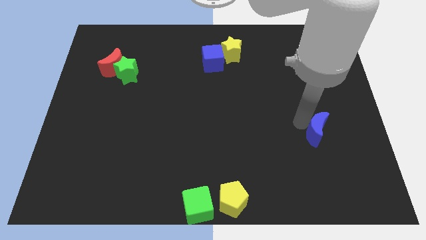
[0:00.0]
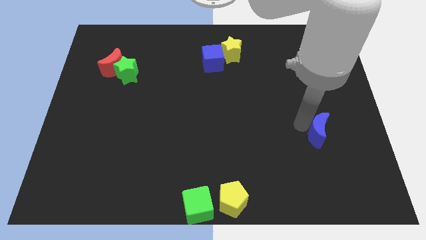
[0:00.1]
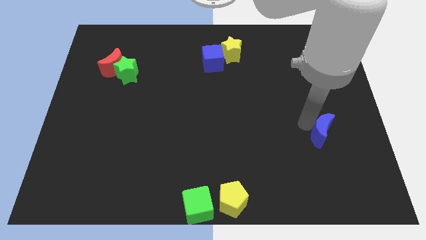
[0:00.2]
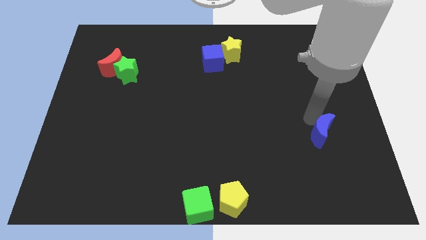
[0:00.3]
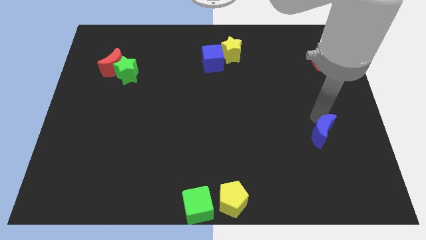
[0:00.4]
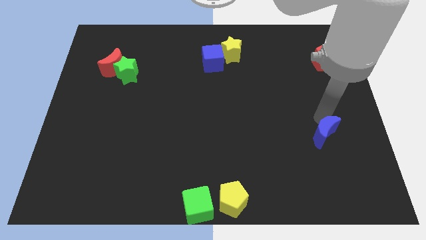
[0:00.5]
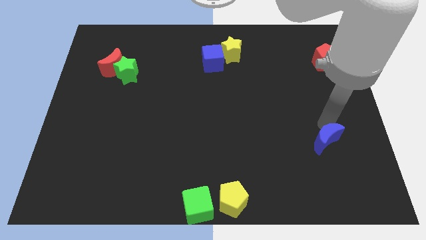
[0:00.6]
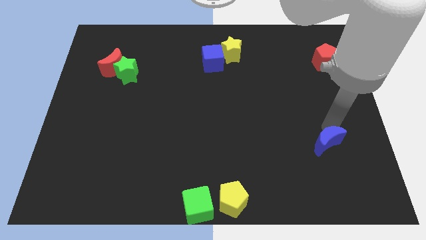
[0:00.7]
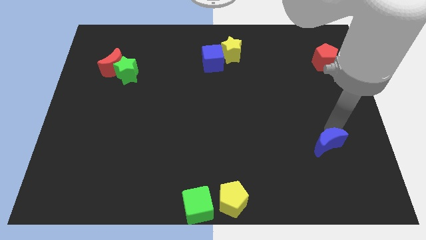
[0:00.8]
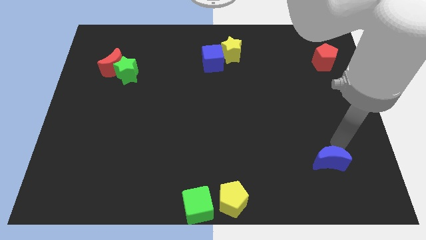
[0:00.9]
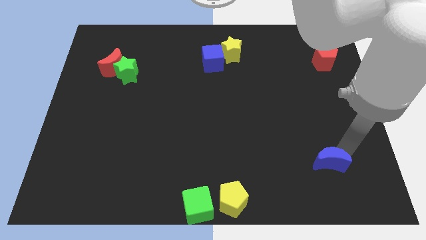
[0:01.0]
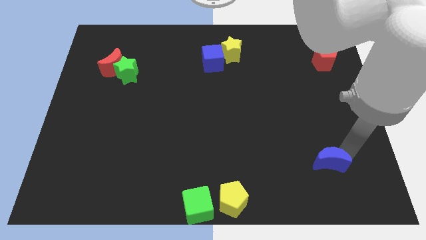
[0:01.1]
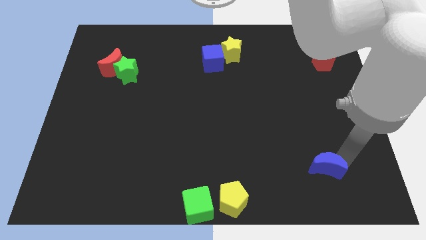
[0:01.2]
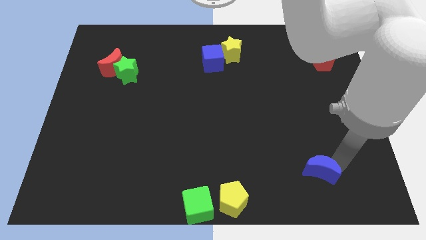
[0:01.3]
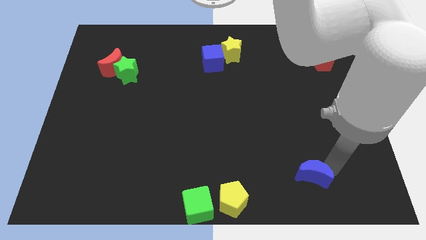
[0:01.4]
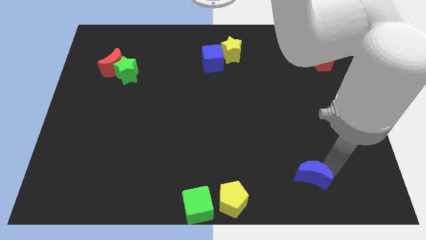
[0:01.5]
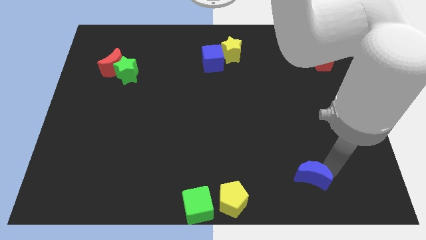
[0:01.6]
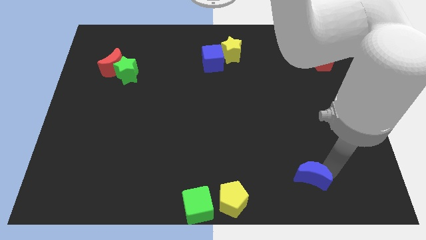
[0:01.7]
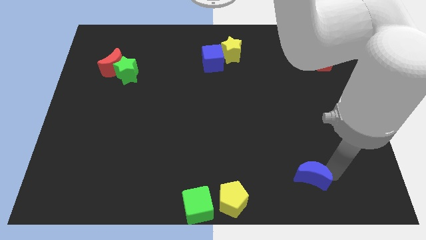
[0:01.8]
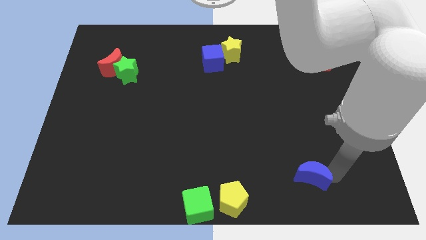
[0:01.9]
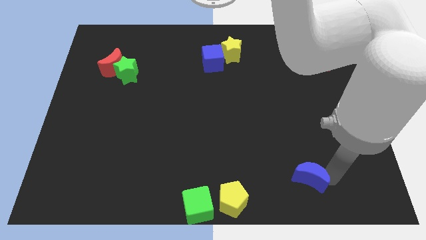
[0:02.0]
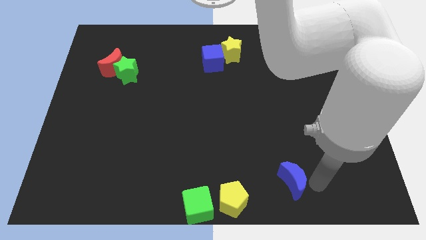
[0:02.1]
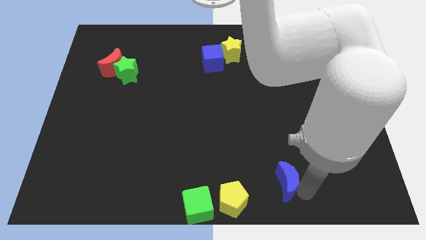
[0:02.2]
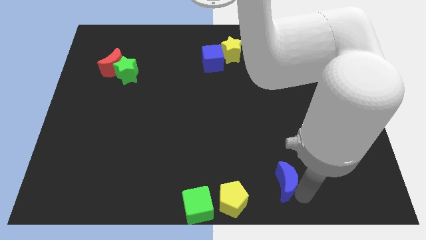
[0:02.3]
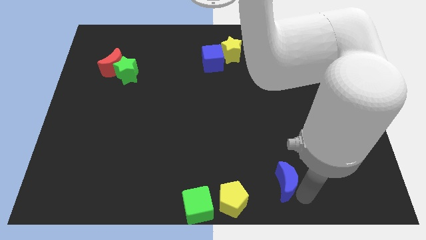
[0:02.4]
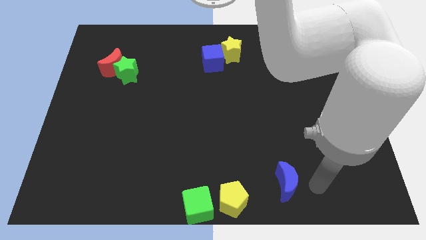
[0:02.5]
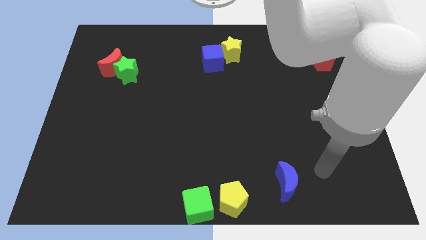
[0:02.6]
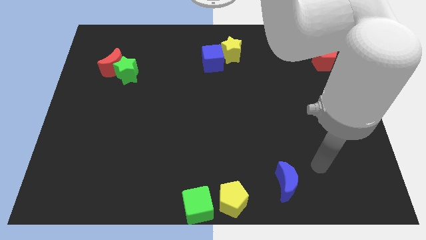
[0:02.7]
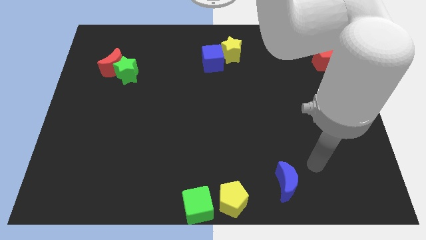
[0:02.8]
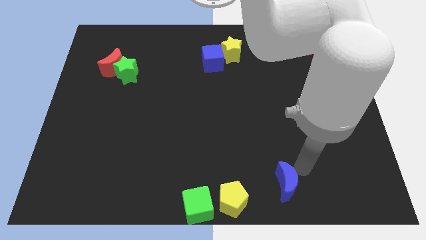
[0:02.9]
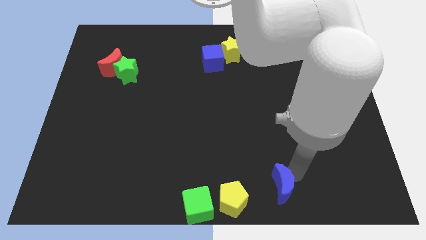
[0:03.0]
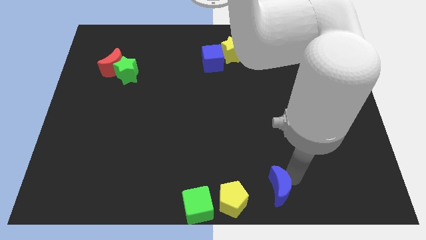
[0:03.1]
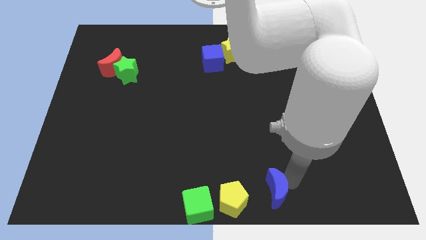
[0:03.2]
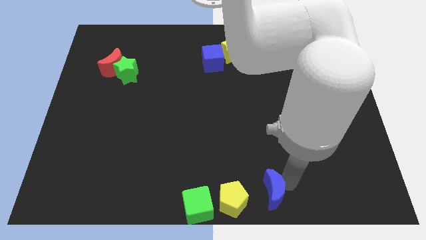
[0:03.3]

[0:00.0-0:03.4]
move blue moon towards the yellow pentagon and green cube

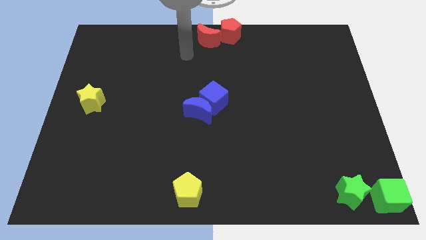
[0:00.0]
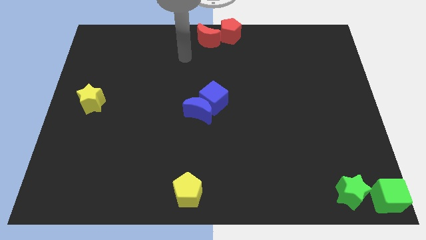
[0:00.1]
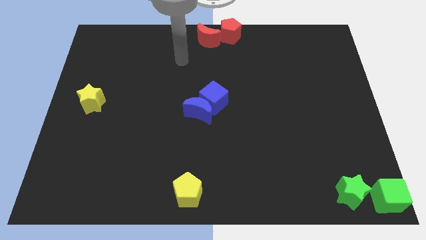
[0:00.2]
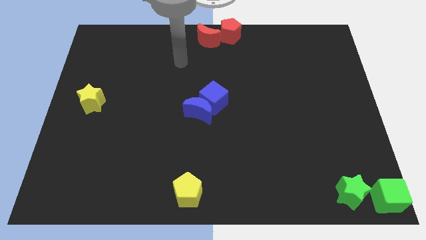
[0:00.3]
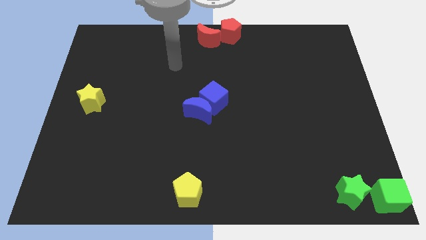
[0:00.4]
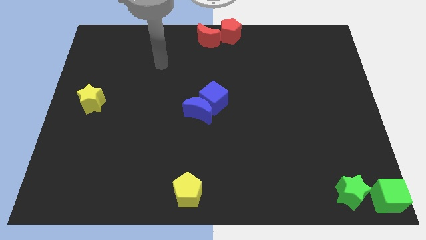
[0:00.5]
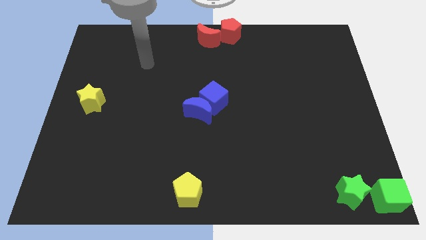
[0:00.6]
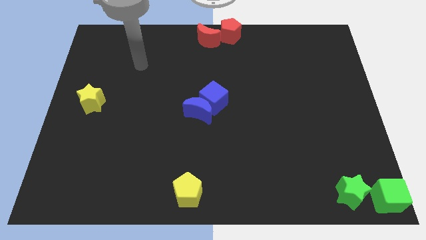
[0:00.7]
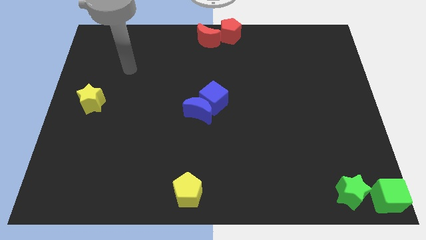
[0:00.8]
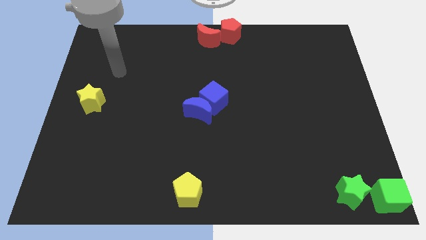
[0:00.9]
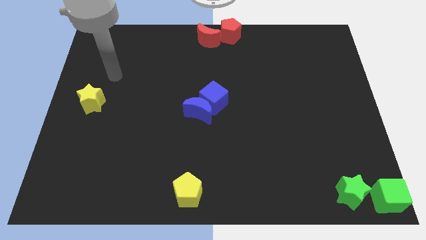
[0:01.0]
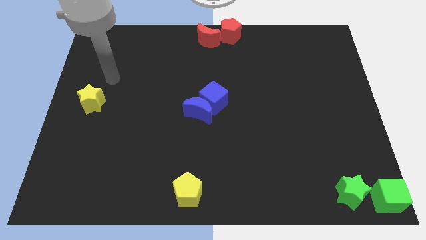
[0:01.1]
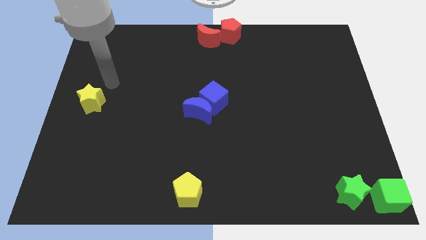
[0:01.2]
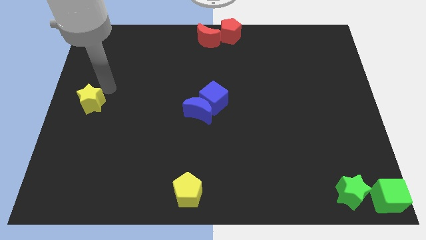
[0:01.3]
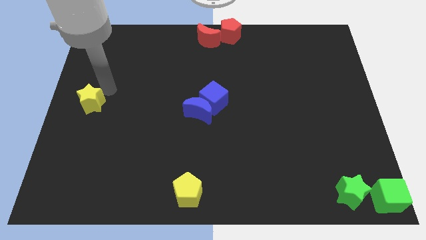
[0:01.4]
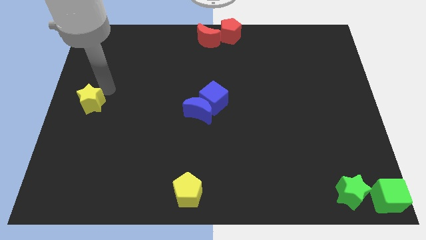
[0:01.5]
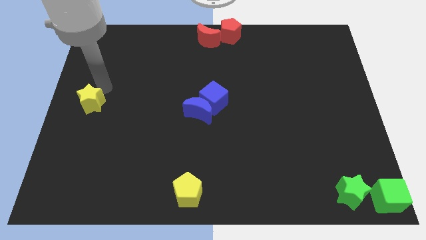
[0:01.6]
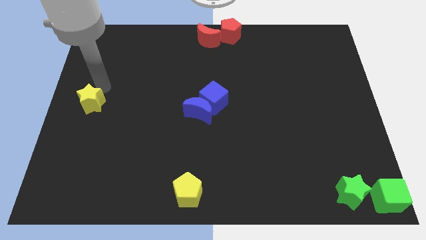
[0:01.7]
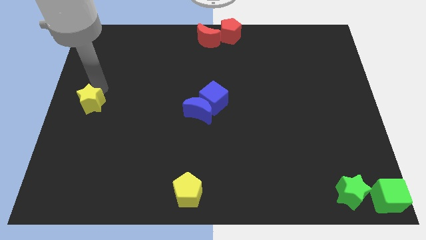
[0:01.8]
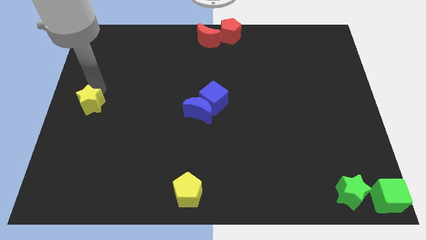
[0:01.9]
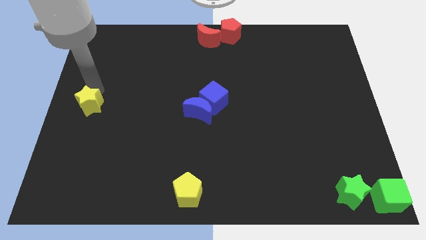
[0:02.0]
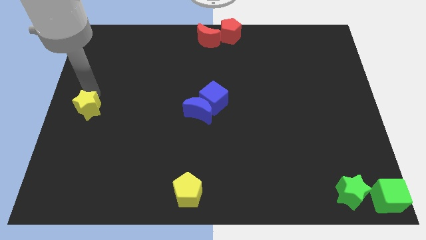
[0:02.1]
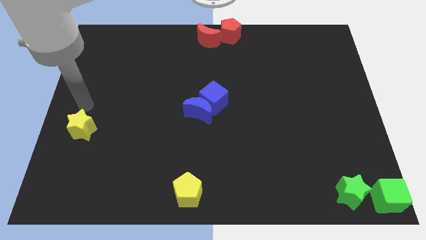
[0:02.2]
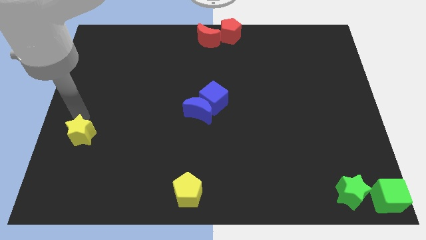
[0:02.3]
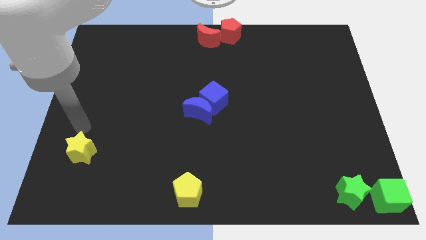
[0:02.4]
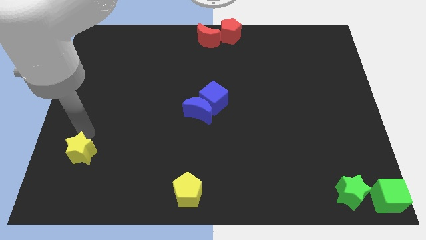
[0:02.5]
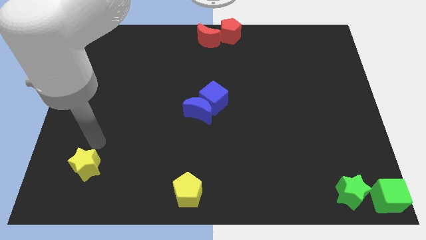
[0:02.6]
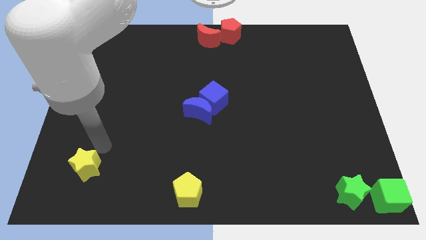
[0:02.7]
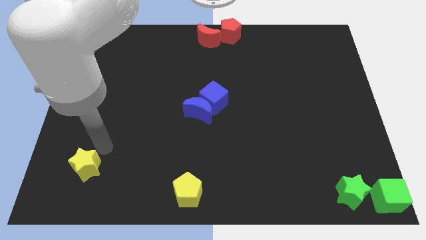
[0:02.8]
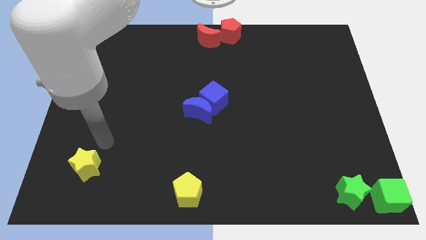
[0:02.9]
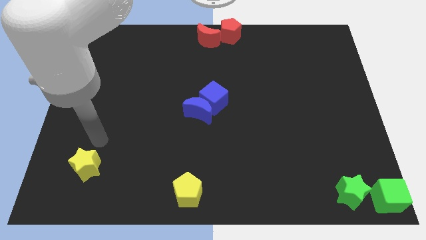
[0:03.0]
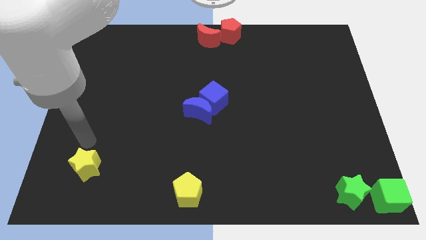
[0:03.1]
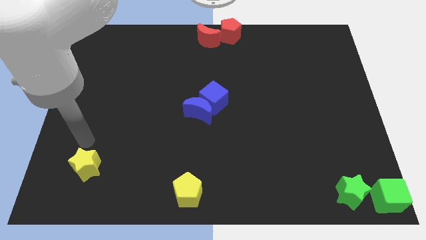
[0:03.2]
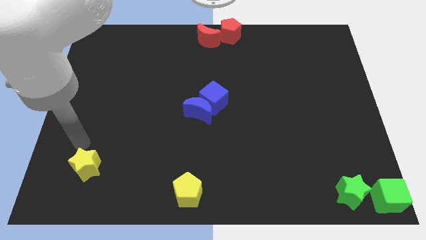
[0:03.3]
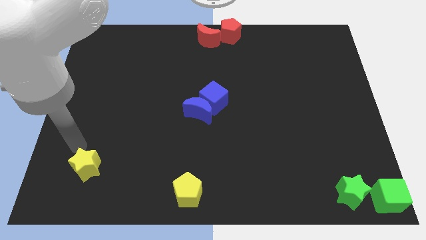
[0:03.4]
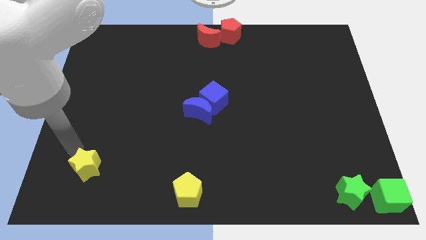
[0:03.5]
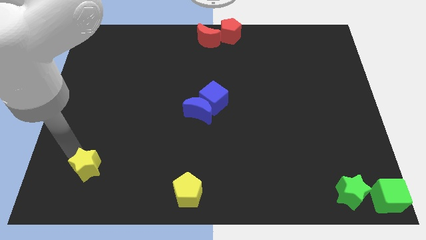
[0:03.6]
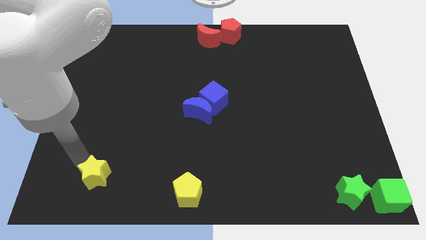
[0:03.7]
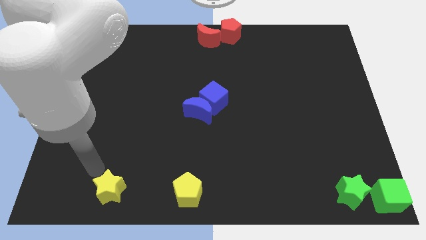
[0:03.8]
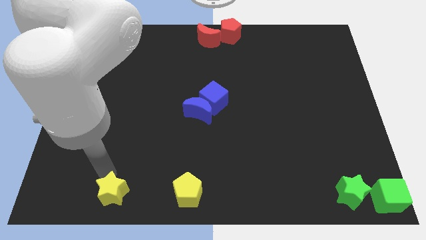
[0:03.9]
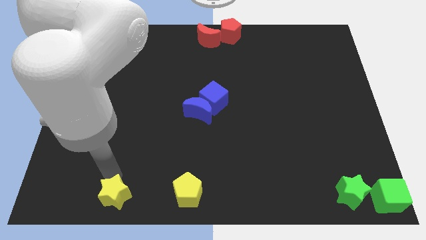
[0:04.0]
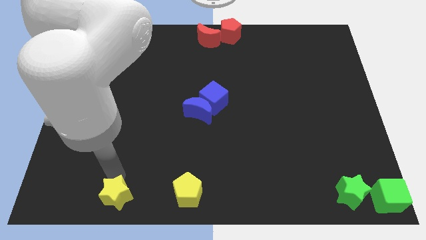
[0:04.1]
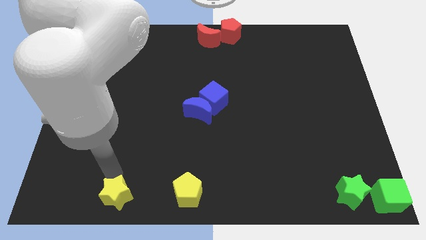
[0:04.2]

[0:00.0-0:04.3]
move the yellow star to the bottom of the board

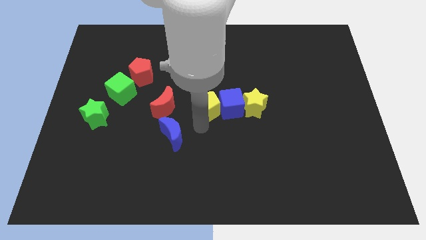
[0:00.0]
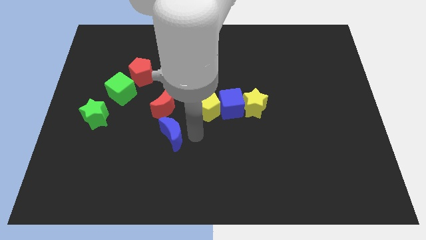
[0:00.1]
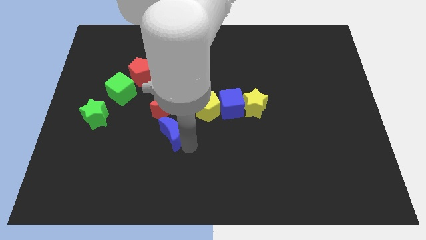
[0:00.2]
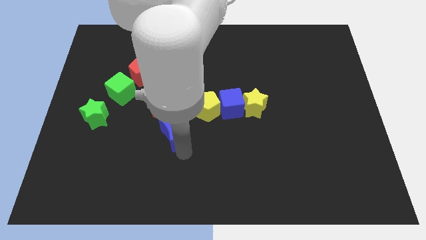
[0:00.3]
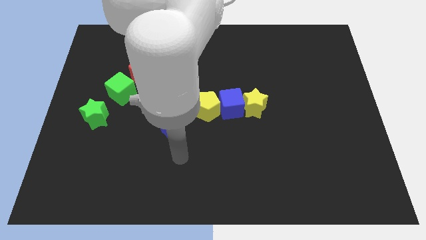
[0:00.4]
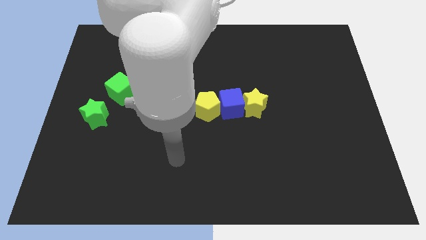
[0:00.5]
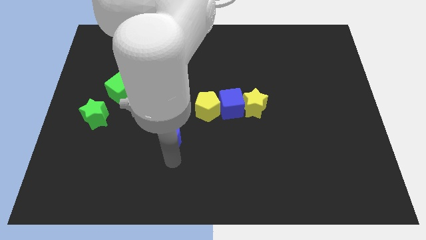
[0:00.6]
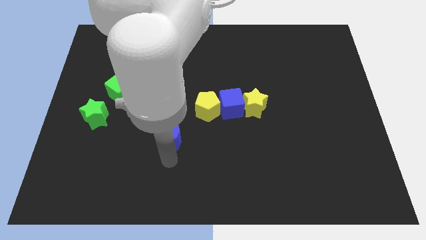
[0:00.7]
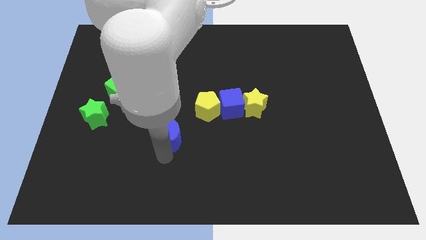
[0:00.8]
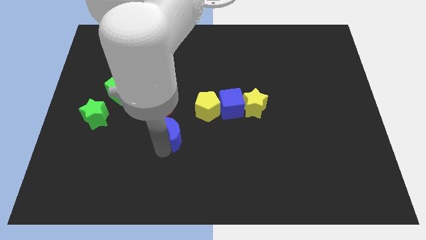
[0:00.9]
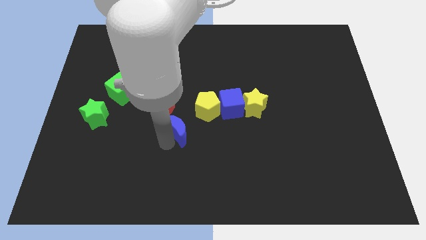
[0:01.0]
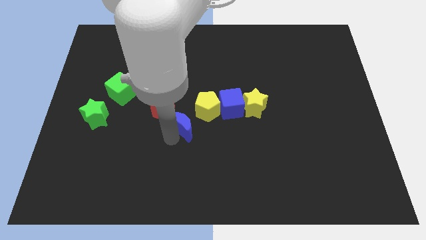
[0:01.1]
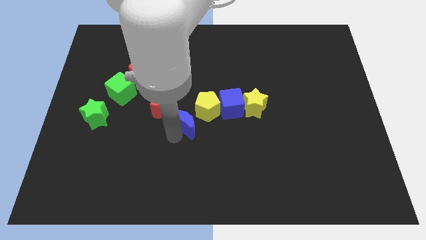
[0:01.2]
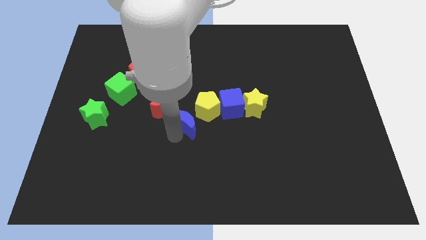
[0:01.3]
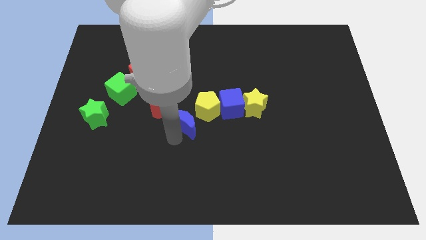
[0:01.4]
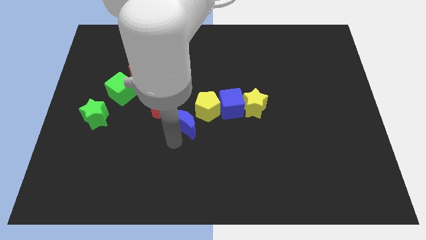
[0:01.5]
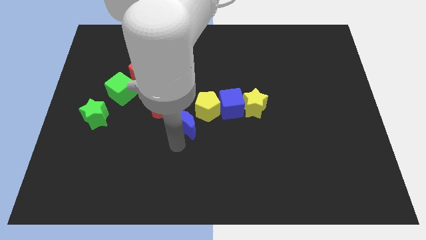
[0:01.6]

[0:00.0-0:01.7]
move the blue crescent close to the red crescent
